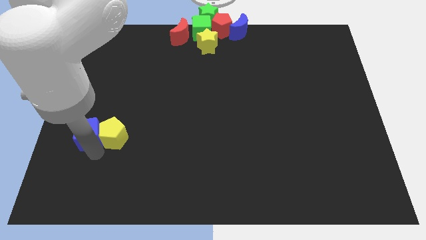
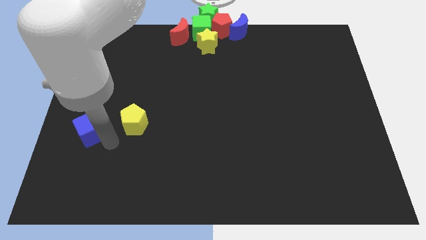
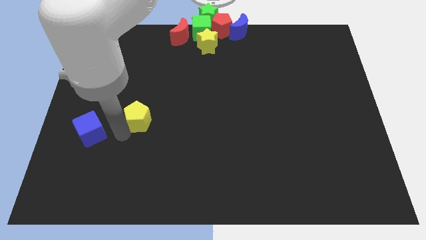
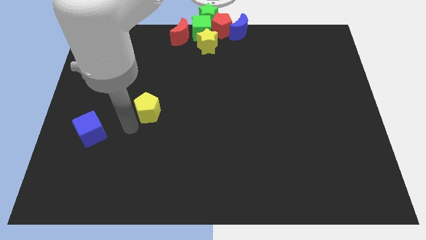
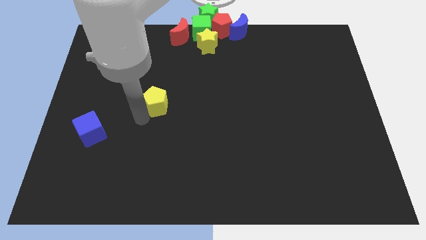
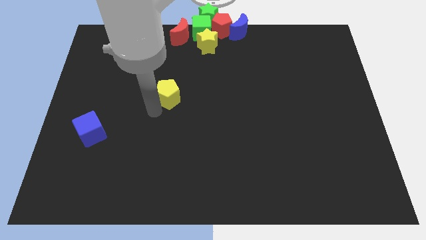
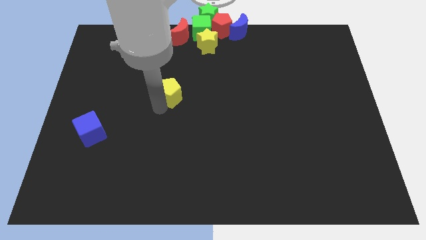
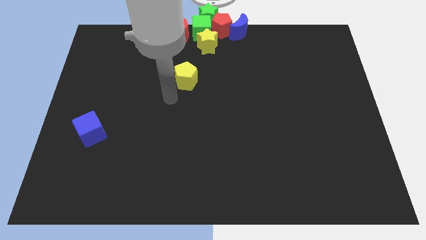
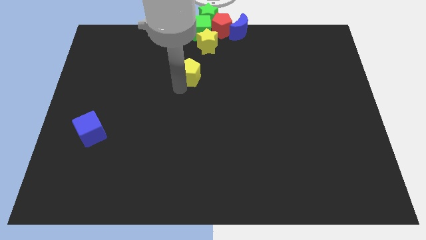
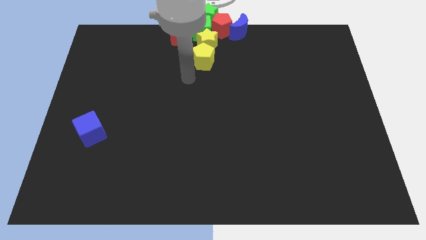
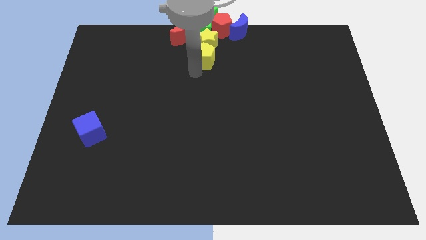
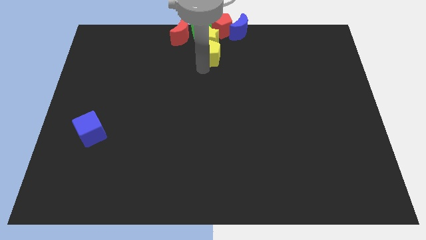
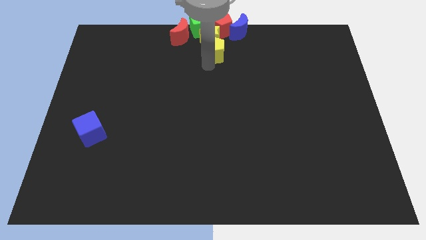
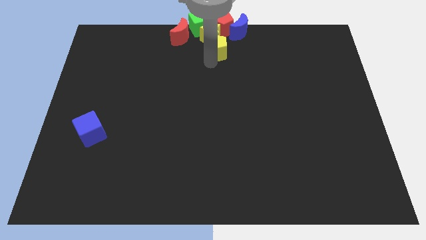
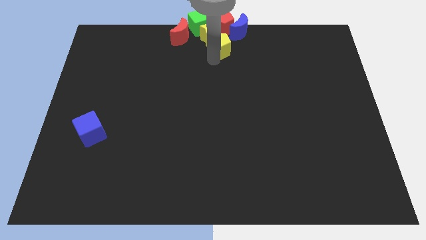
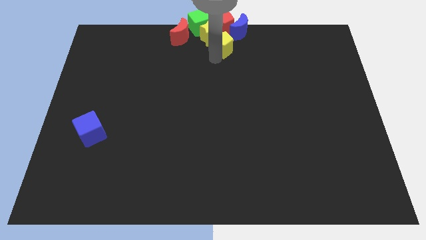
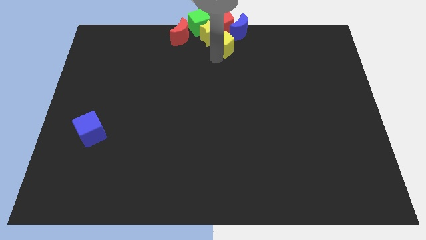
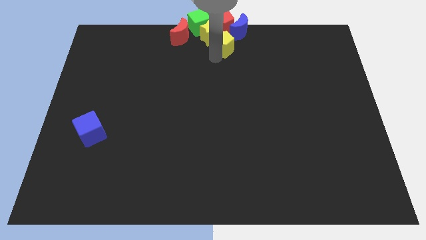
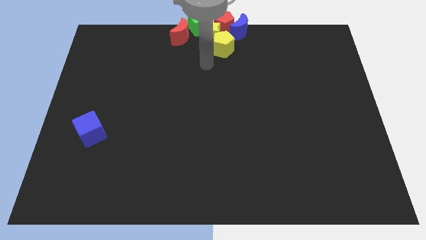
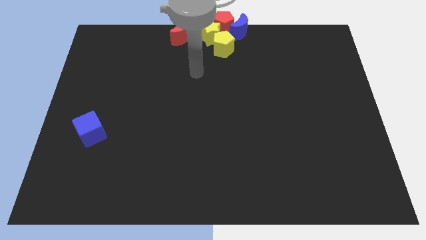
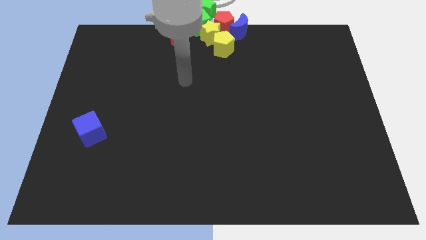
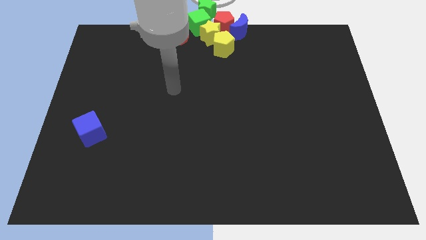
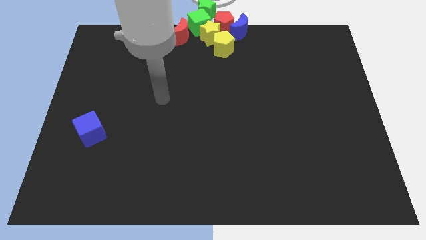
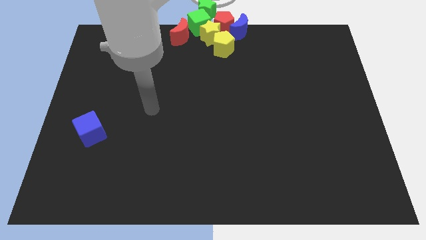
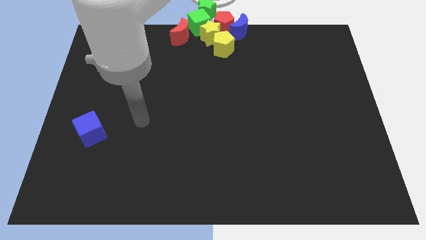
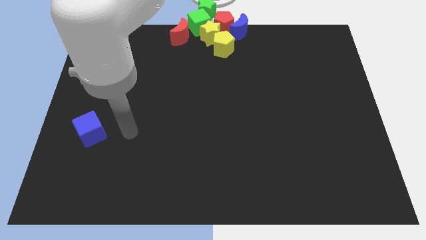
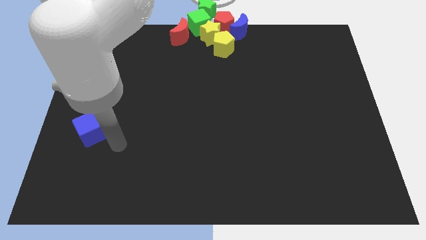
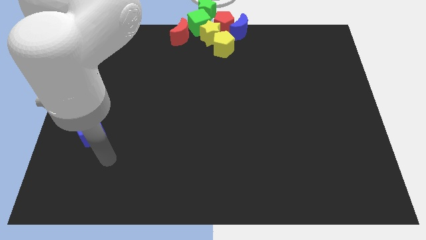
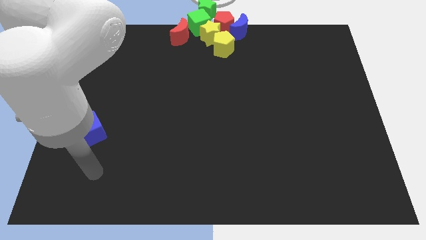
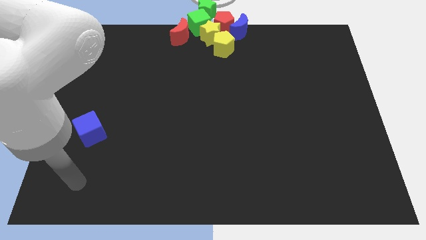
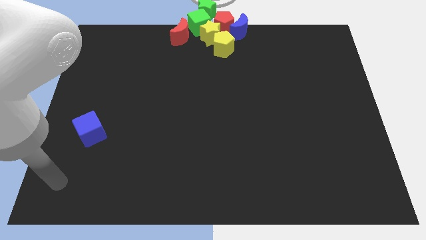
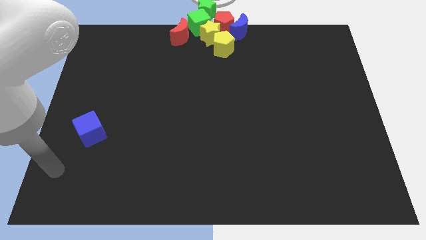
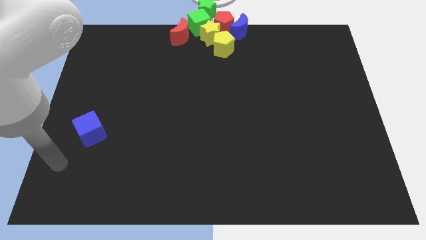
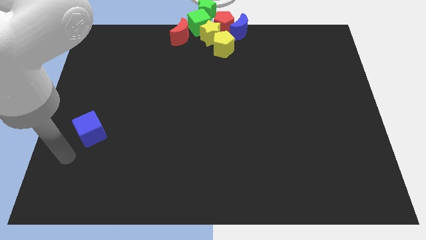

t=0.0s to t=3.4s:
push the yellow pentagon to the group of blocks

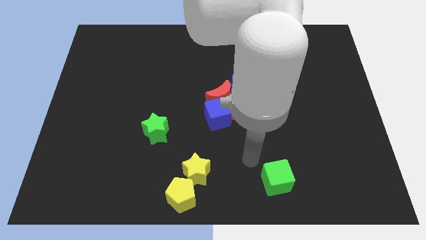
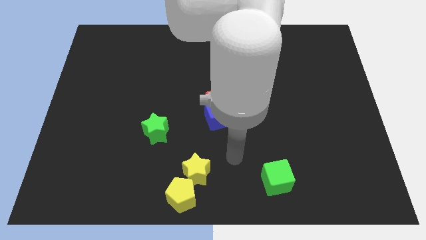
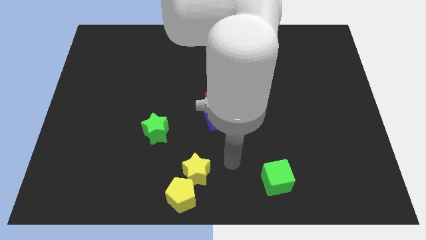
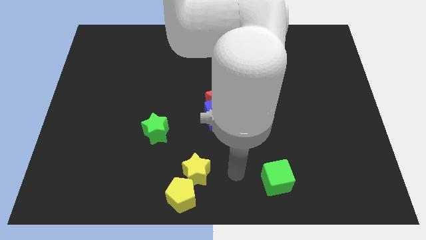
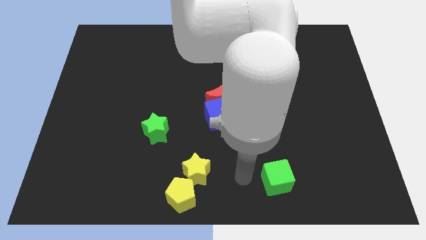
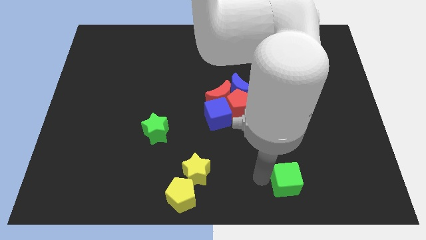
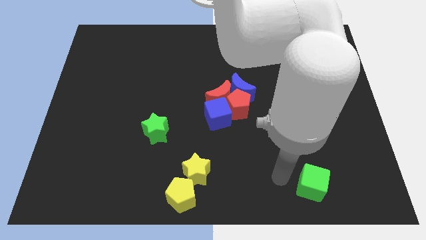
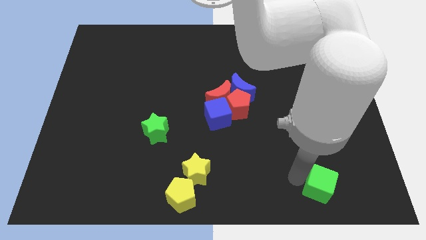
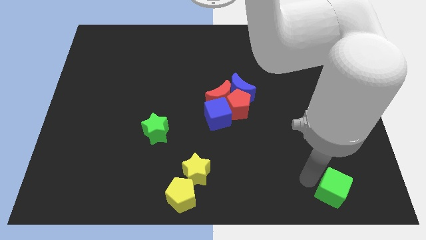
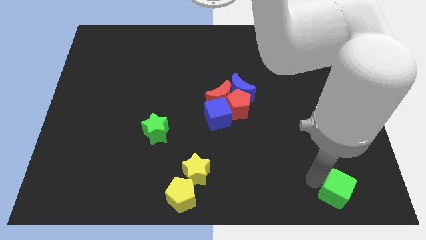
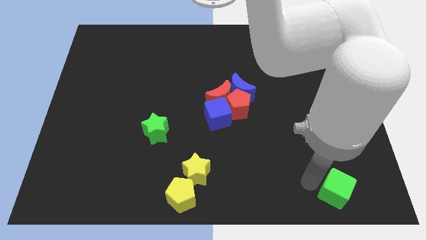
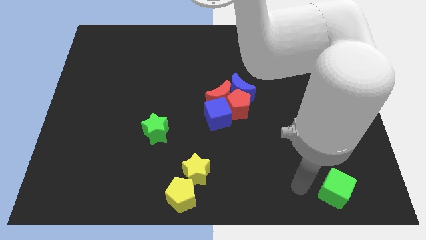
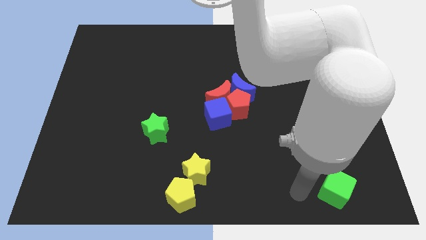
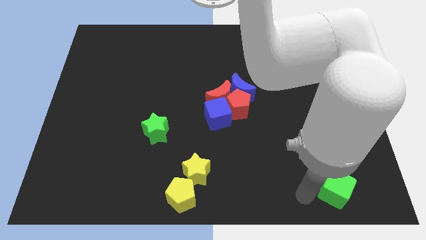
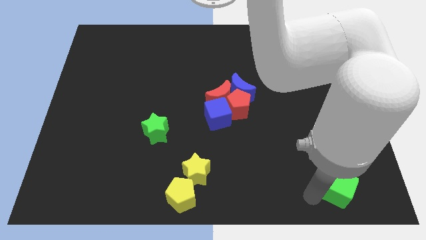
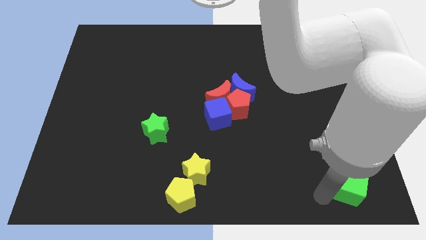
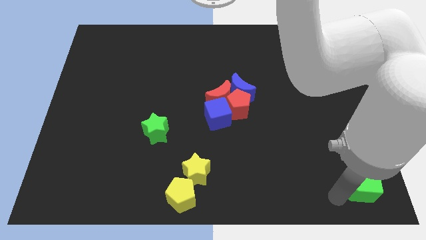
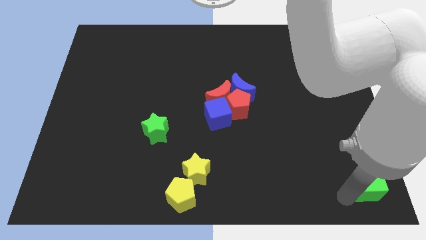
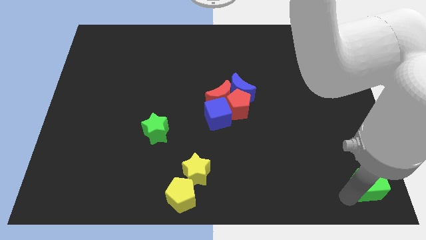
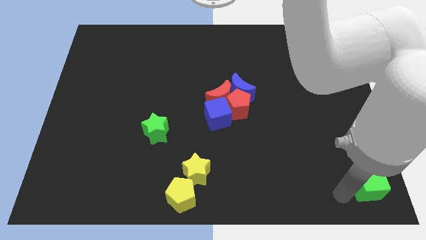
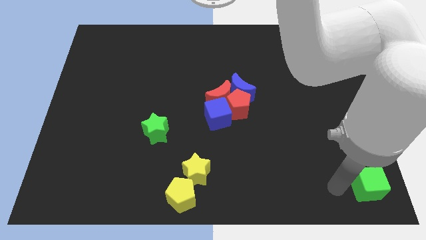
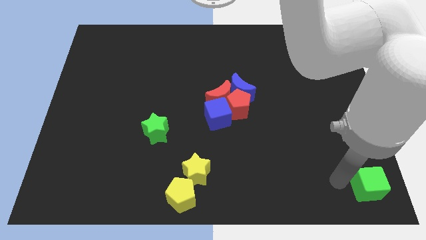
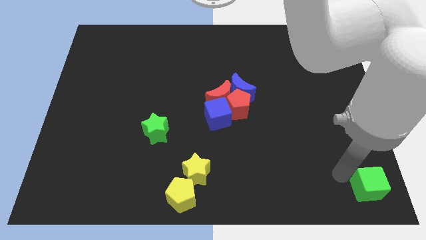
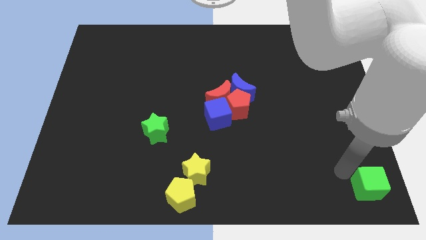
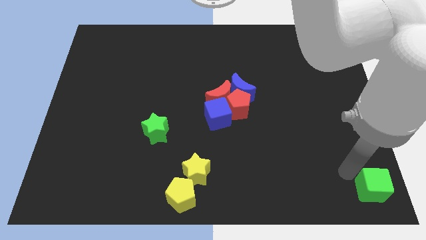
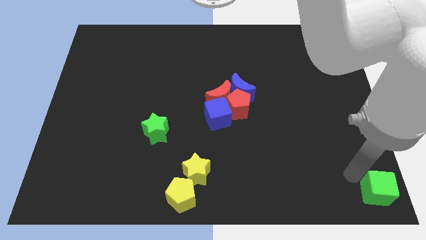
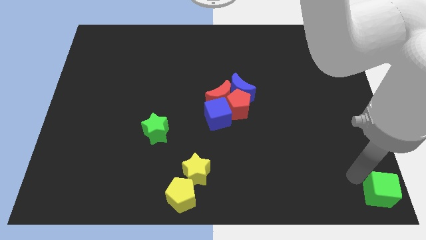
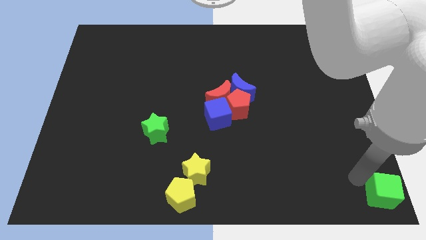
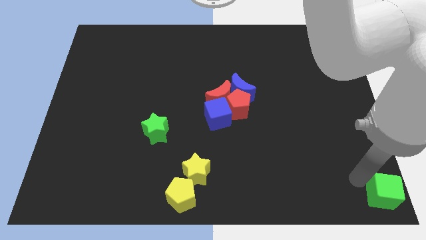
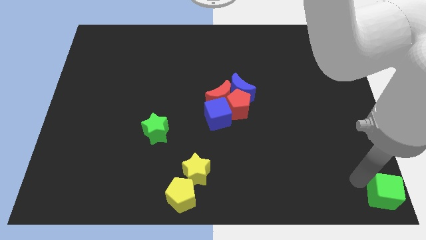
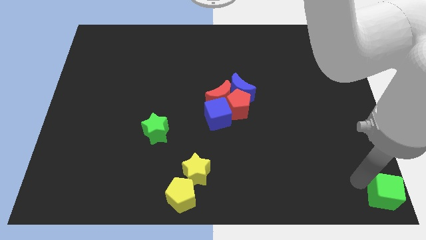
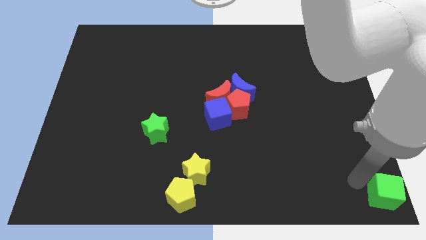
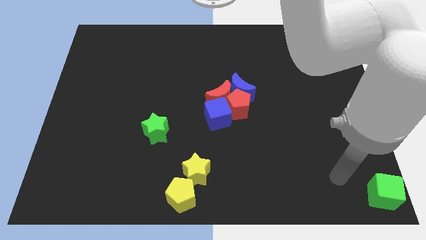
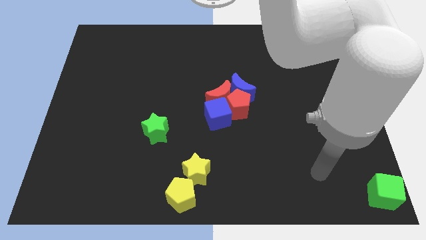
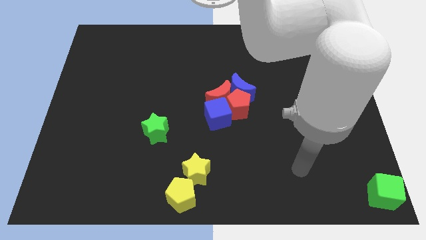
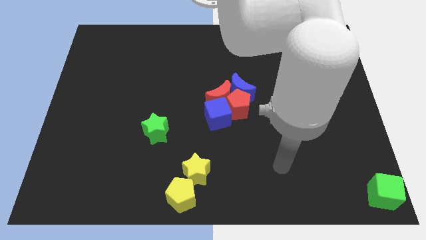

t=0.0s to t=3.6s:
place the green cube at the bottom right corner of the board

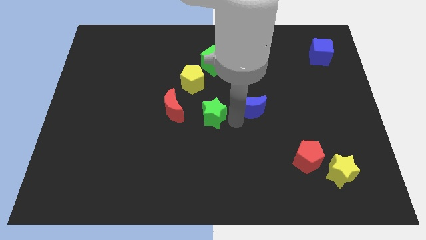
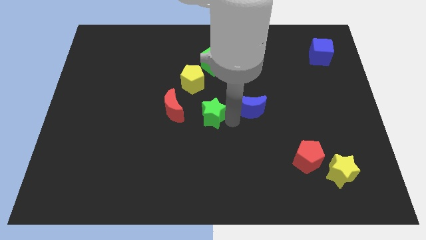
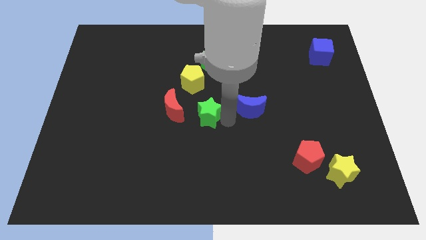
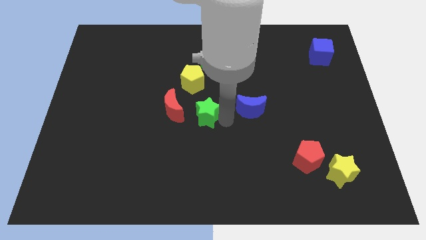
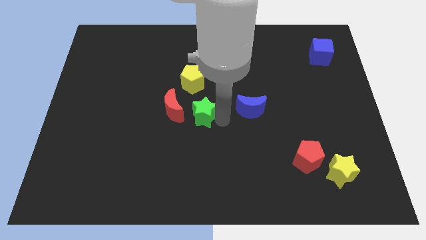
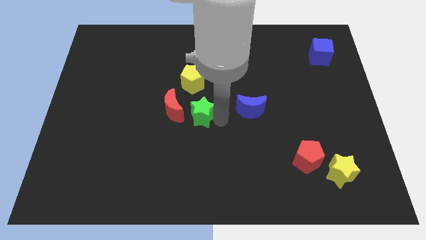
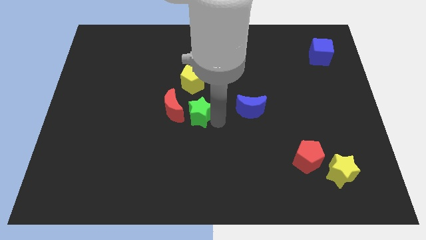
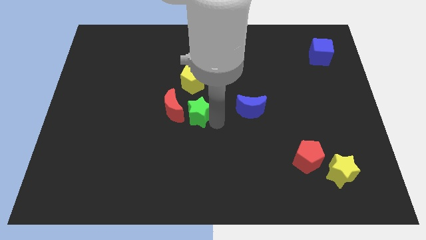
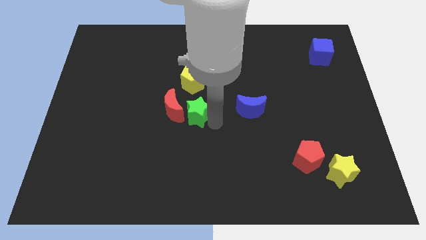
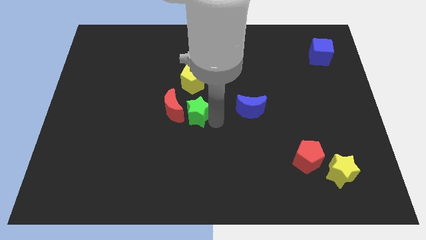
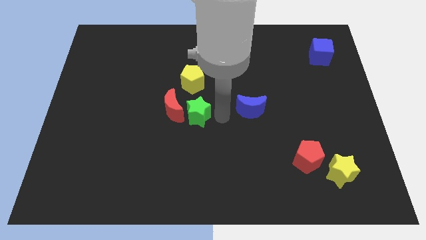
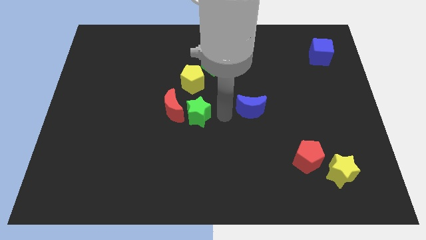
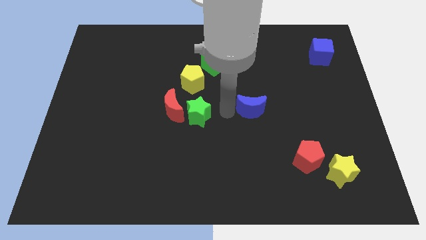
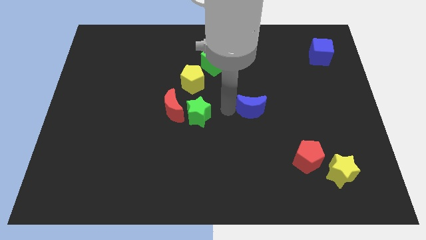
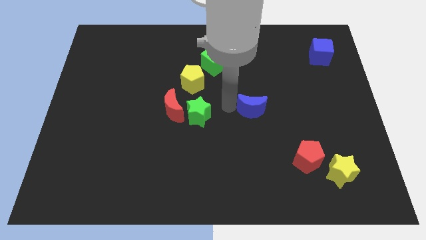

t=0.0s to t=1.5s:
place green star towards red crescent

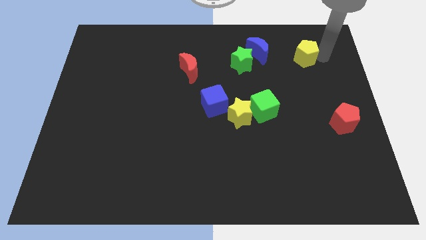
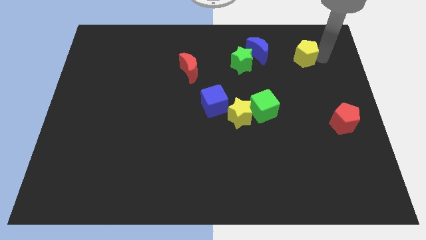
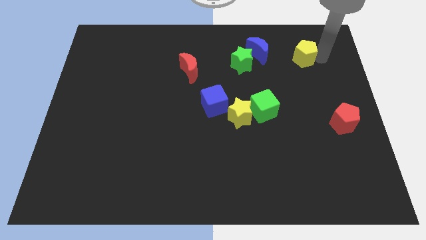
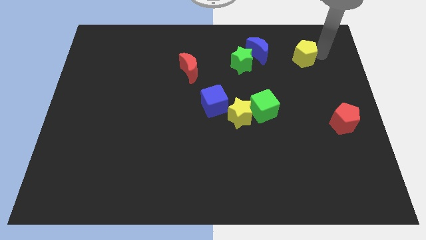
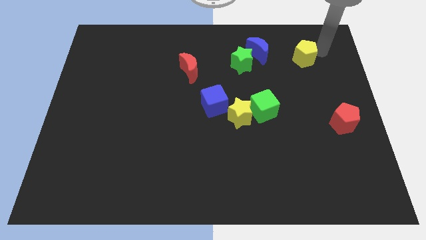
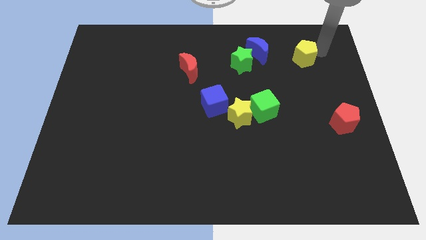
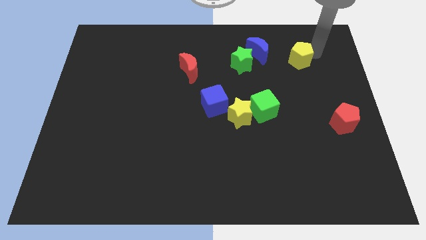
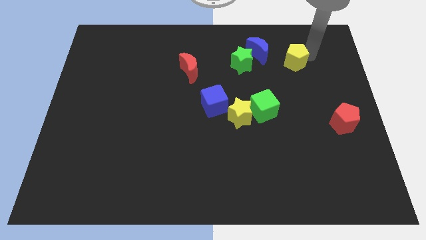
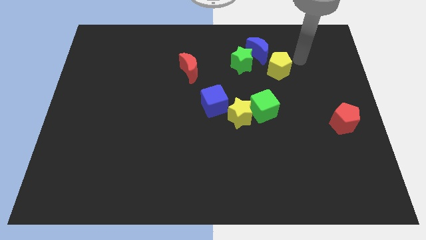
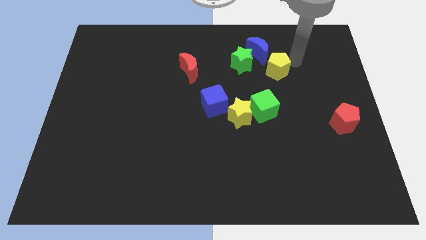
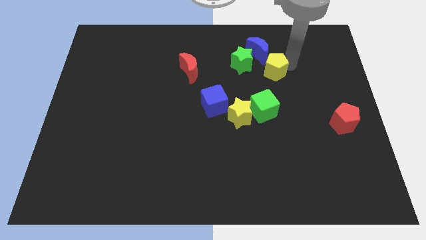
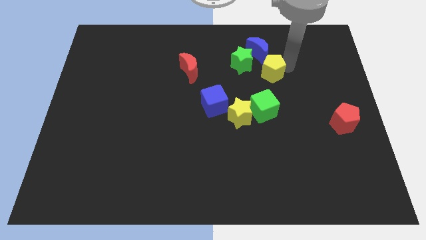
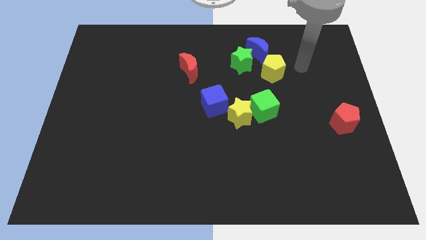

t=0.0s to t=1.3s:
move the yellow pentagon to the top of the green cube
